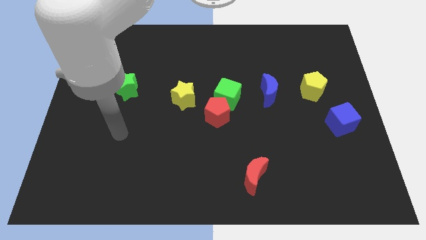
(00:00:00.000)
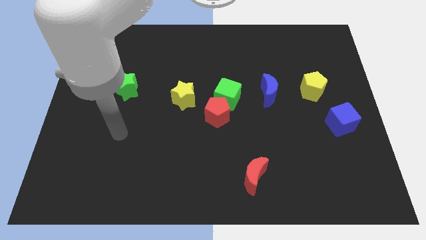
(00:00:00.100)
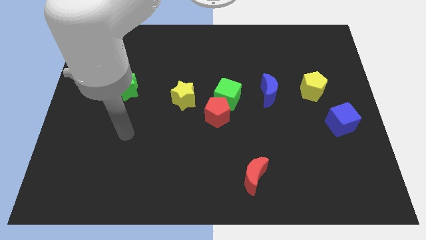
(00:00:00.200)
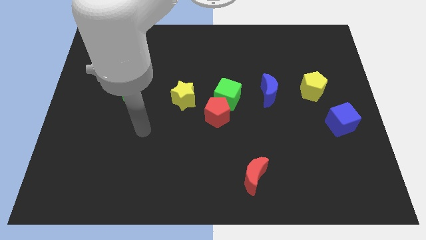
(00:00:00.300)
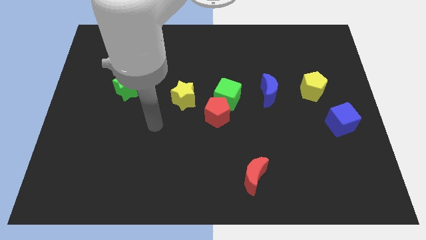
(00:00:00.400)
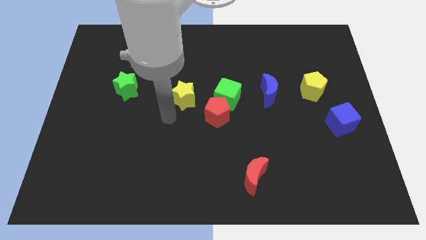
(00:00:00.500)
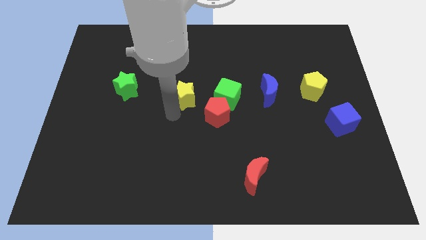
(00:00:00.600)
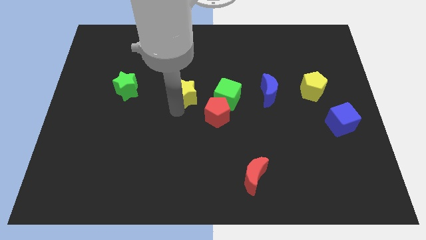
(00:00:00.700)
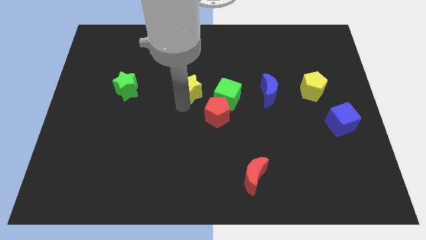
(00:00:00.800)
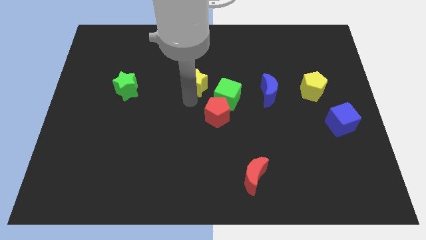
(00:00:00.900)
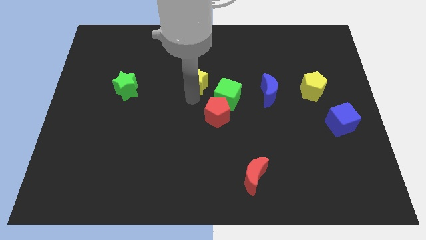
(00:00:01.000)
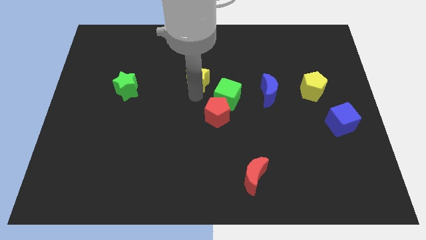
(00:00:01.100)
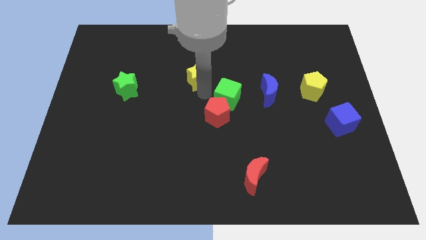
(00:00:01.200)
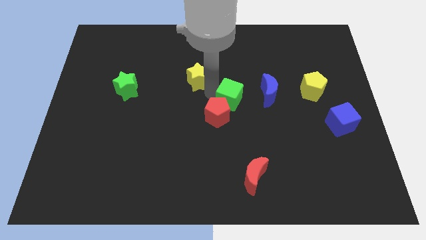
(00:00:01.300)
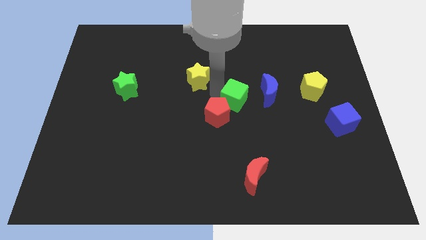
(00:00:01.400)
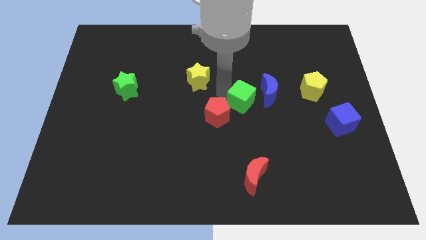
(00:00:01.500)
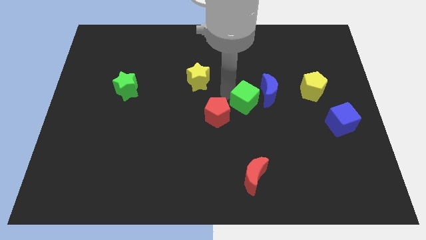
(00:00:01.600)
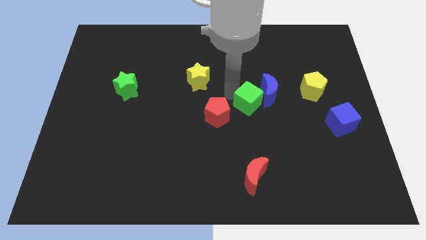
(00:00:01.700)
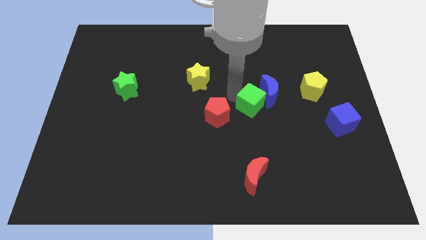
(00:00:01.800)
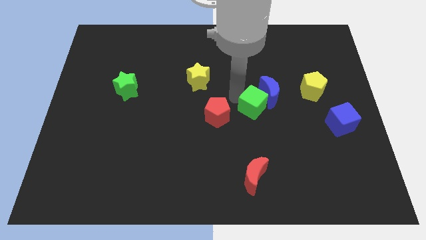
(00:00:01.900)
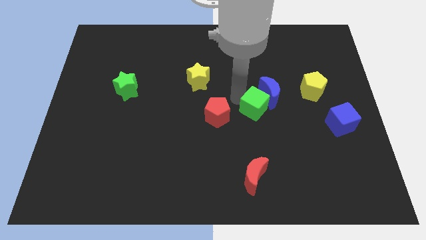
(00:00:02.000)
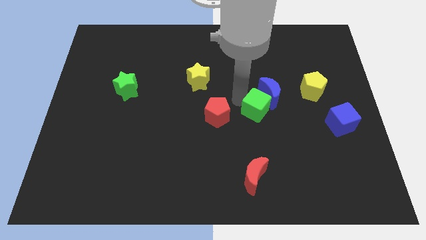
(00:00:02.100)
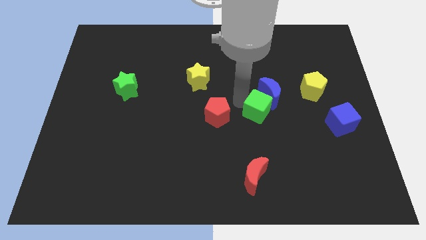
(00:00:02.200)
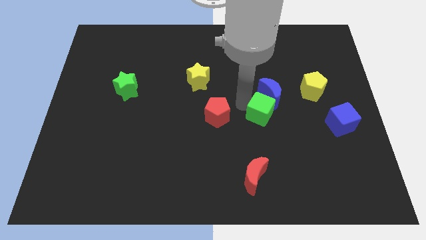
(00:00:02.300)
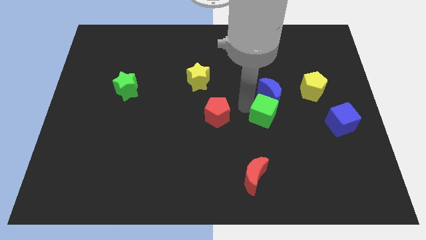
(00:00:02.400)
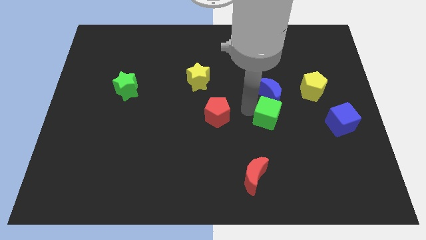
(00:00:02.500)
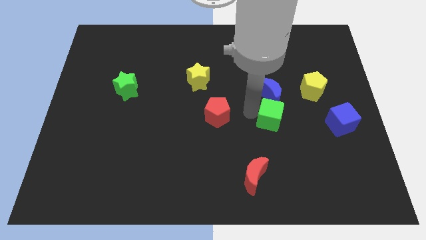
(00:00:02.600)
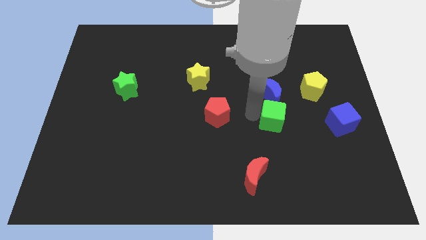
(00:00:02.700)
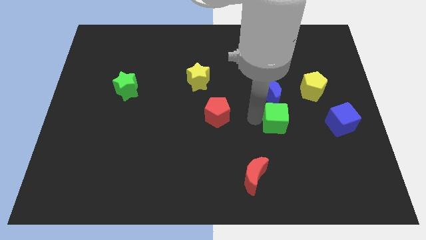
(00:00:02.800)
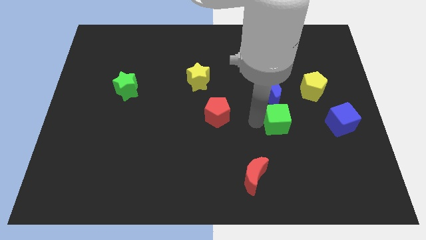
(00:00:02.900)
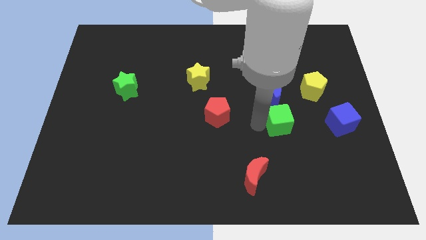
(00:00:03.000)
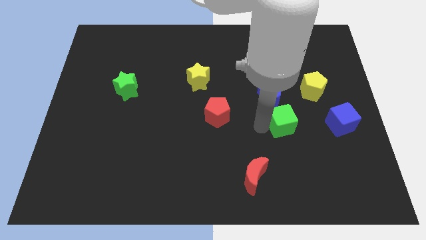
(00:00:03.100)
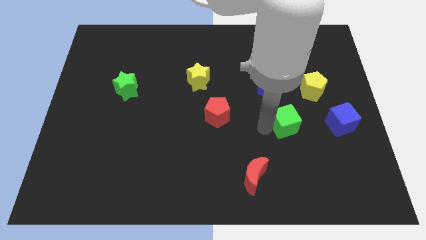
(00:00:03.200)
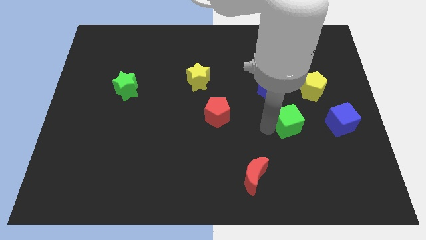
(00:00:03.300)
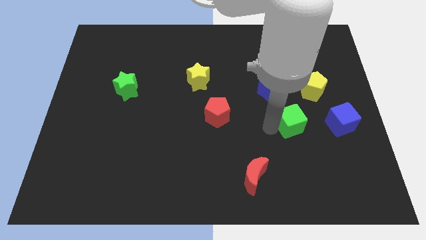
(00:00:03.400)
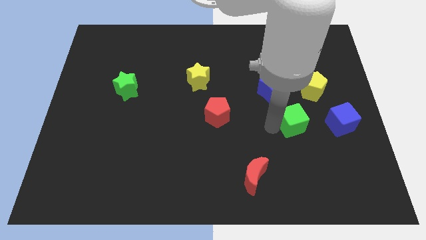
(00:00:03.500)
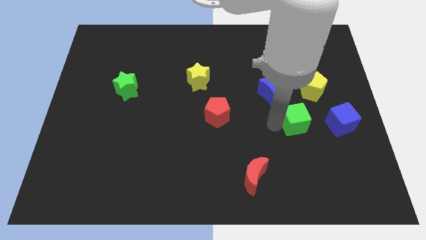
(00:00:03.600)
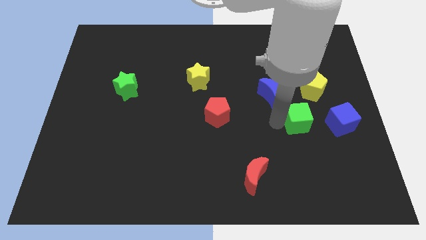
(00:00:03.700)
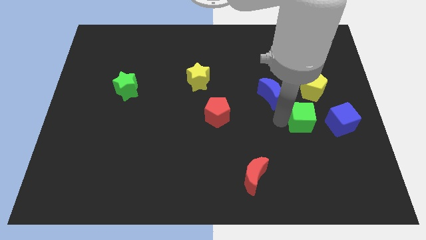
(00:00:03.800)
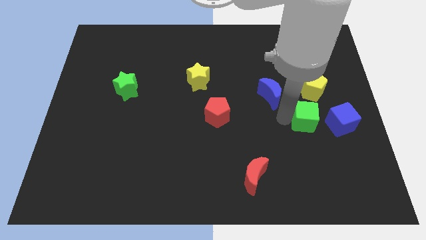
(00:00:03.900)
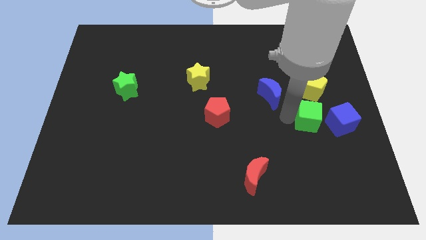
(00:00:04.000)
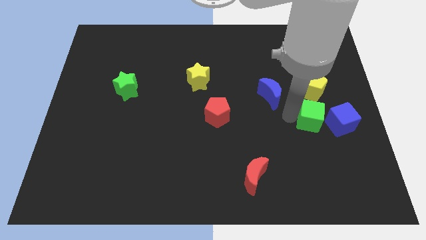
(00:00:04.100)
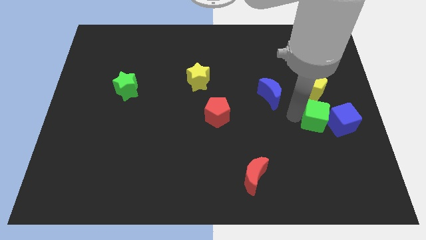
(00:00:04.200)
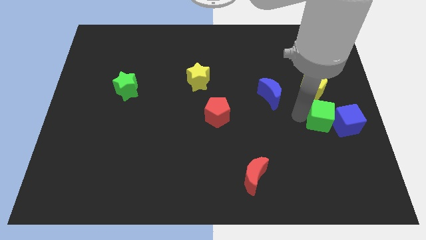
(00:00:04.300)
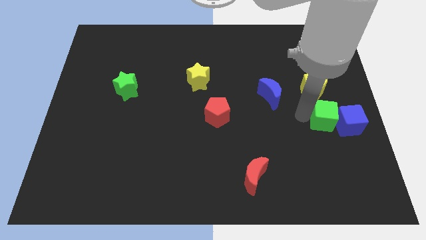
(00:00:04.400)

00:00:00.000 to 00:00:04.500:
slide the green cube towards the blue cube

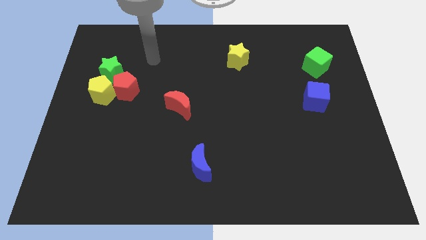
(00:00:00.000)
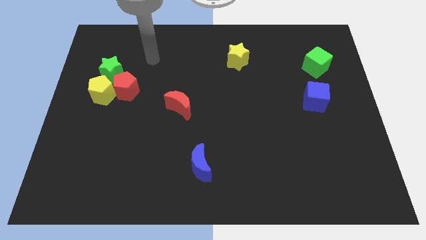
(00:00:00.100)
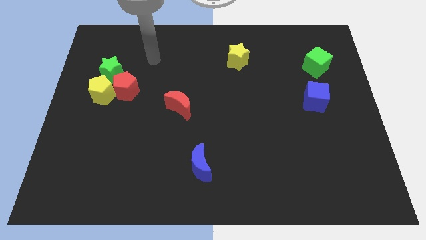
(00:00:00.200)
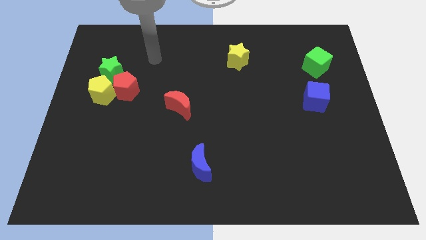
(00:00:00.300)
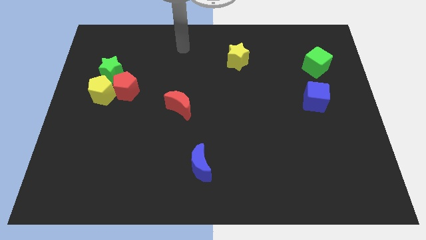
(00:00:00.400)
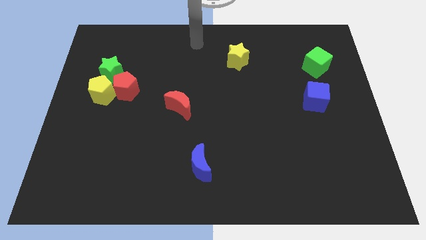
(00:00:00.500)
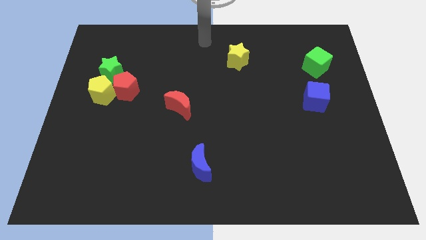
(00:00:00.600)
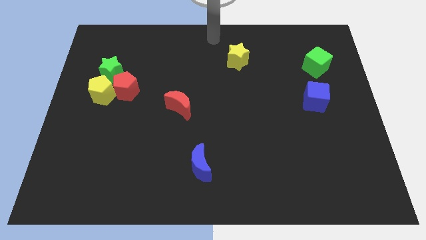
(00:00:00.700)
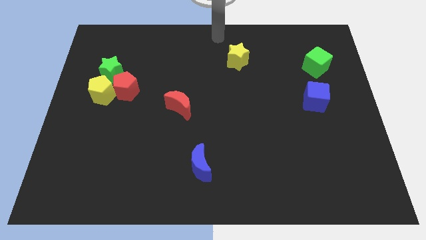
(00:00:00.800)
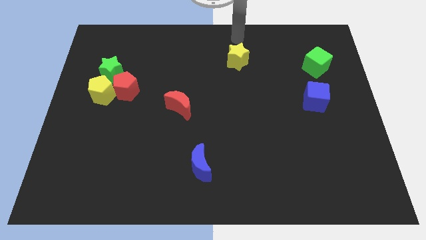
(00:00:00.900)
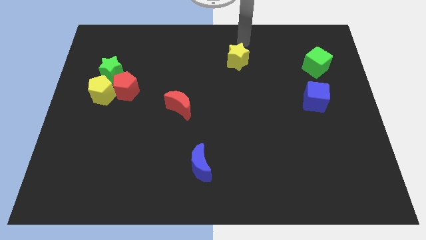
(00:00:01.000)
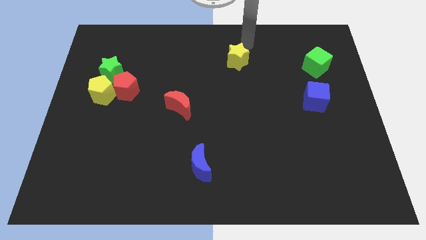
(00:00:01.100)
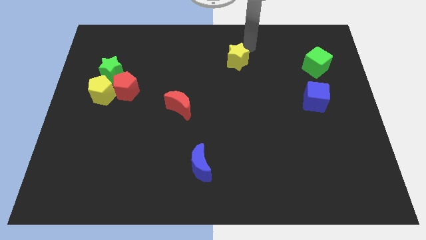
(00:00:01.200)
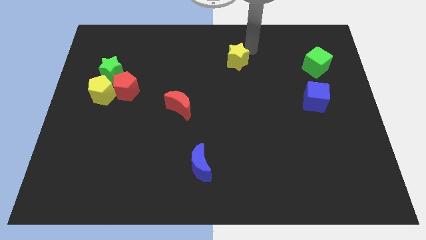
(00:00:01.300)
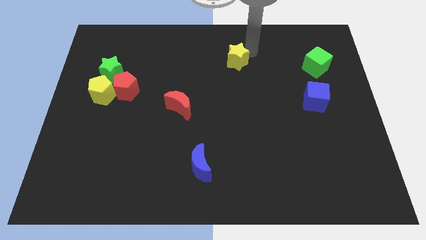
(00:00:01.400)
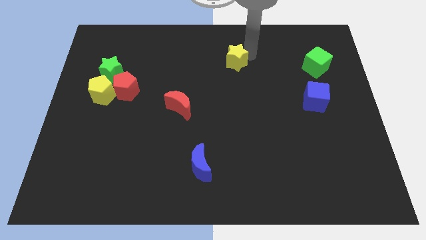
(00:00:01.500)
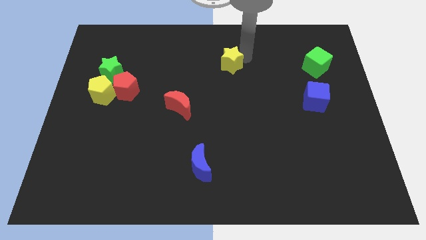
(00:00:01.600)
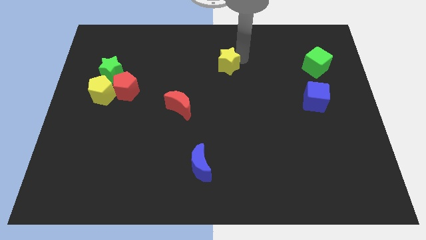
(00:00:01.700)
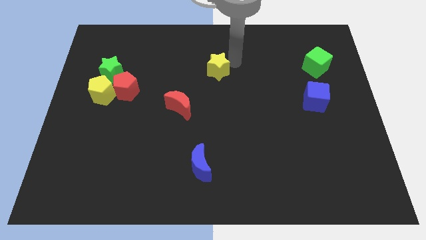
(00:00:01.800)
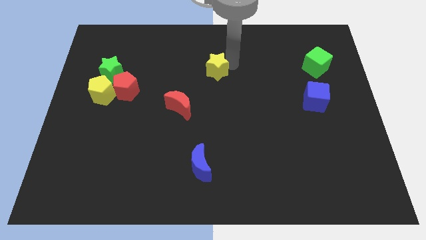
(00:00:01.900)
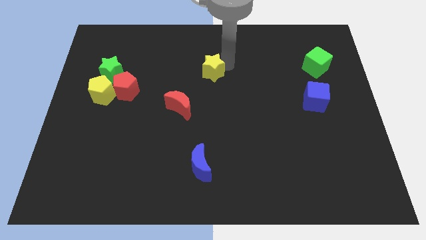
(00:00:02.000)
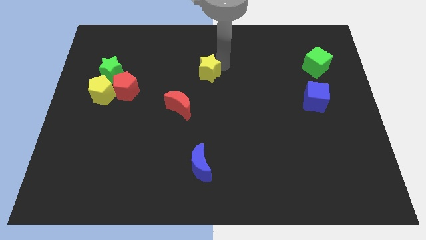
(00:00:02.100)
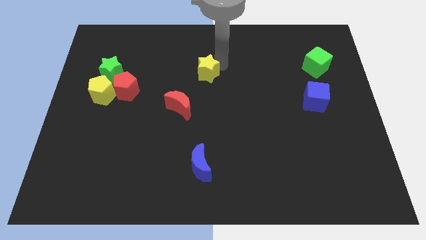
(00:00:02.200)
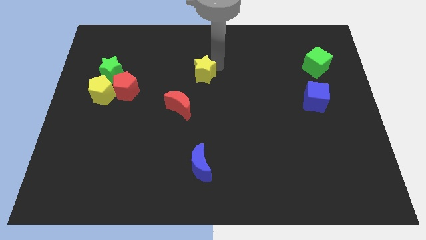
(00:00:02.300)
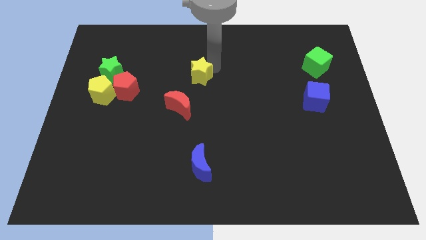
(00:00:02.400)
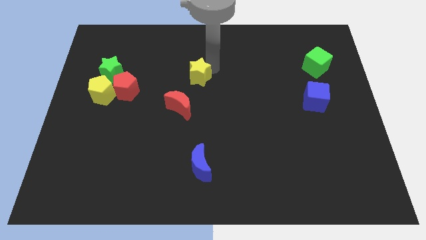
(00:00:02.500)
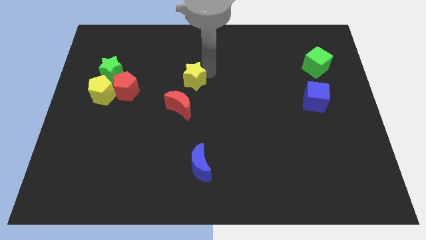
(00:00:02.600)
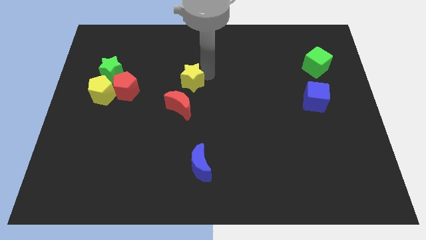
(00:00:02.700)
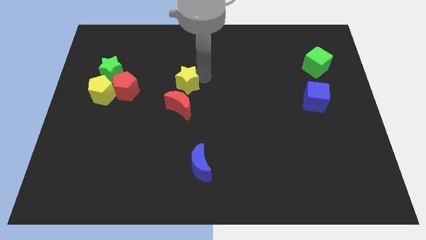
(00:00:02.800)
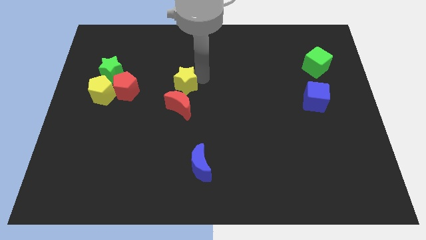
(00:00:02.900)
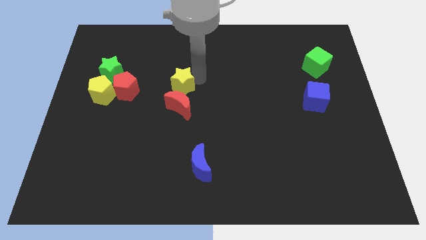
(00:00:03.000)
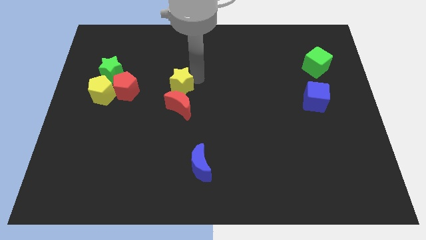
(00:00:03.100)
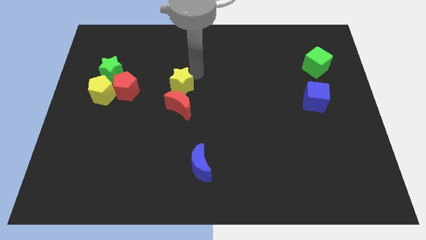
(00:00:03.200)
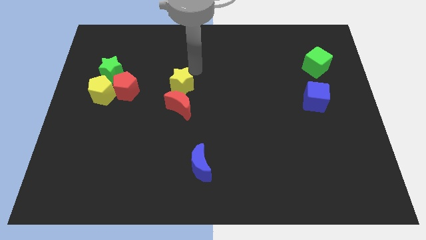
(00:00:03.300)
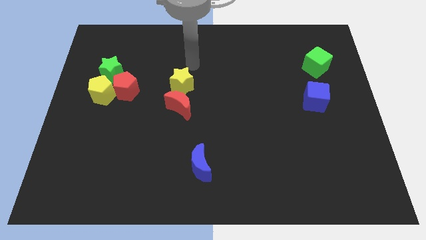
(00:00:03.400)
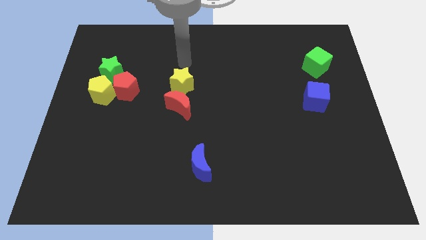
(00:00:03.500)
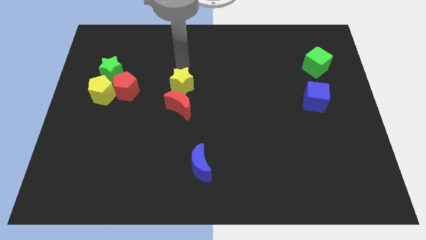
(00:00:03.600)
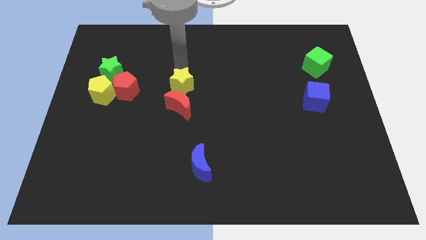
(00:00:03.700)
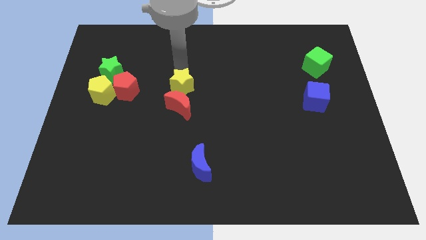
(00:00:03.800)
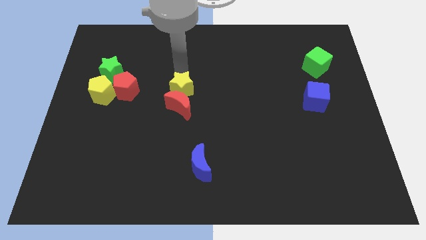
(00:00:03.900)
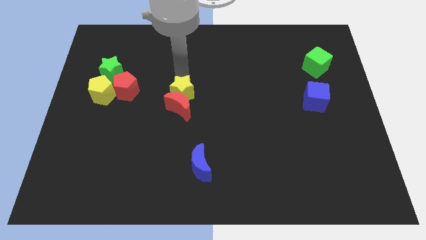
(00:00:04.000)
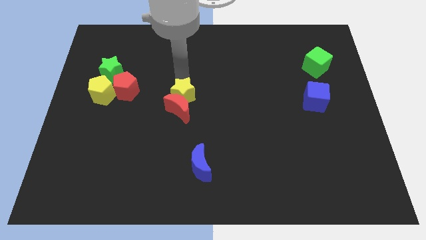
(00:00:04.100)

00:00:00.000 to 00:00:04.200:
put the yellow star towards the red moon
